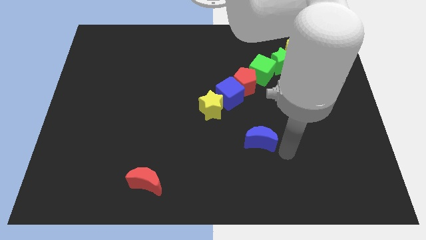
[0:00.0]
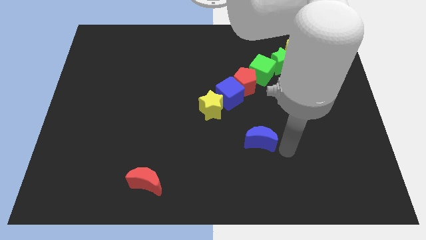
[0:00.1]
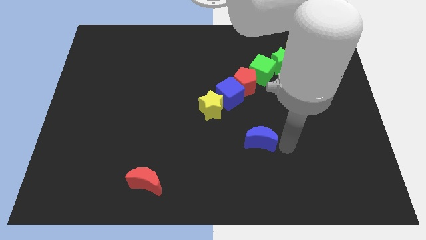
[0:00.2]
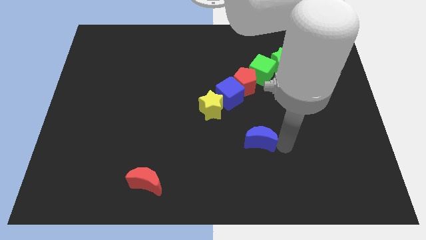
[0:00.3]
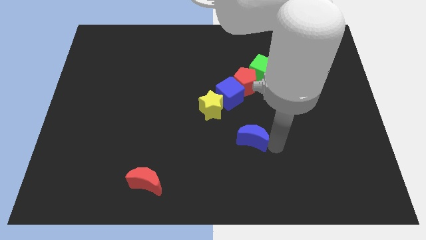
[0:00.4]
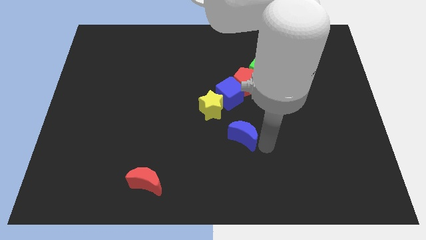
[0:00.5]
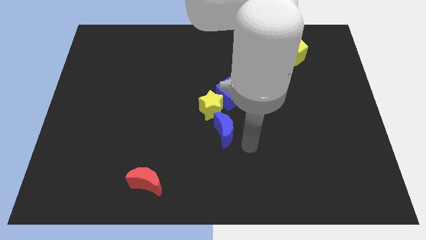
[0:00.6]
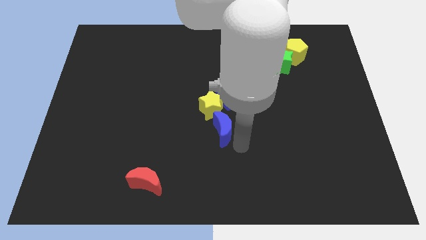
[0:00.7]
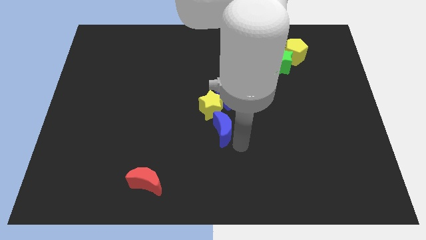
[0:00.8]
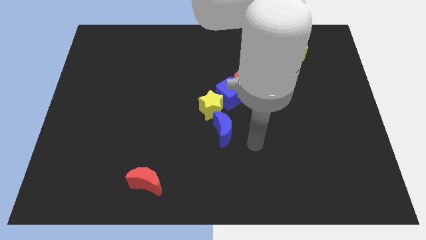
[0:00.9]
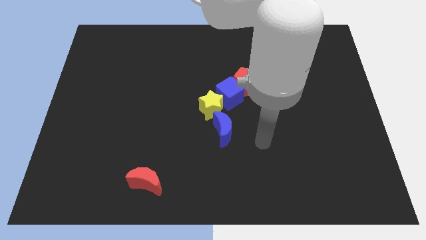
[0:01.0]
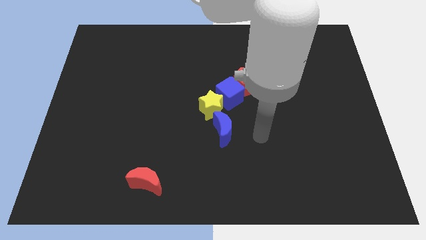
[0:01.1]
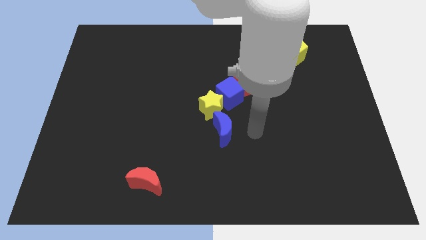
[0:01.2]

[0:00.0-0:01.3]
place the blue moon below the yellow star

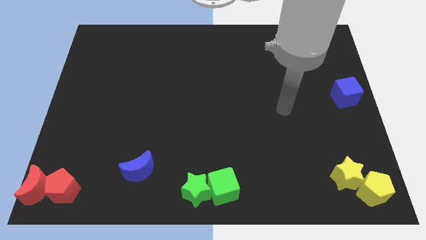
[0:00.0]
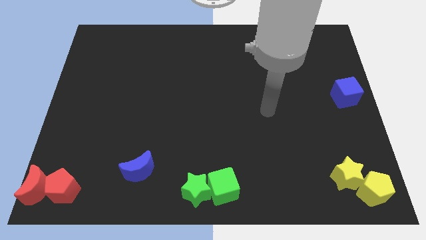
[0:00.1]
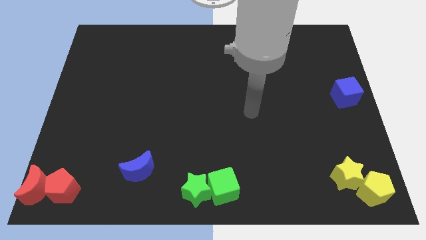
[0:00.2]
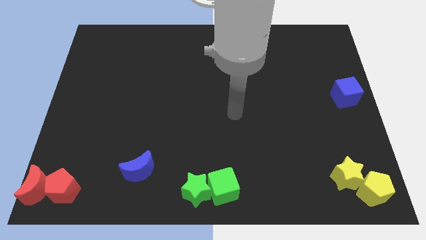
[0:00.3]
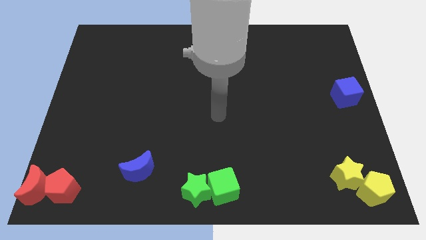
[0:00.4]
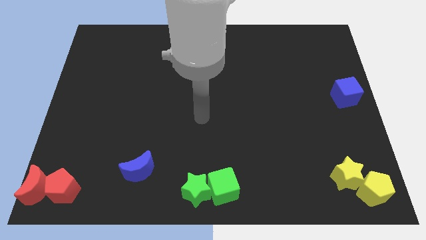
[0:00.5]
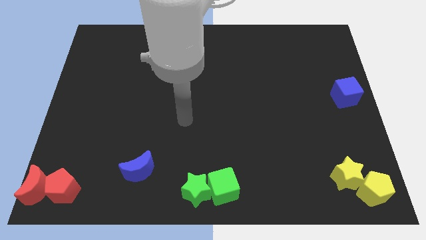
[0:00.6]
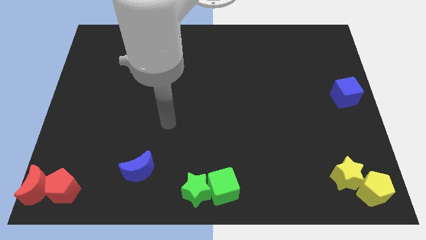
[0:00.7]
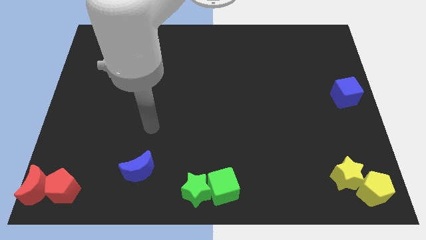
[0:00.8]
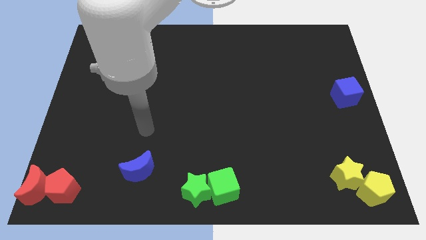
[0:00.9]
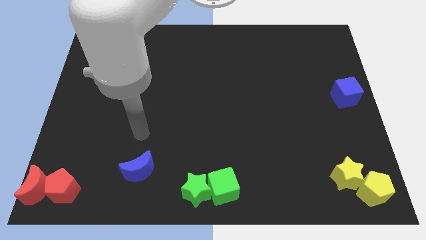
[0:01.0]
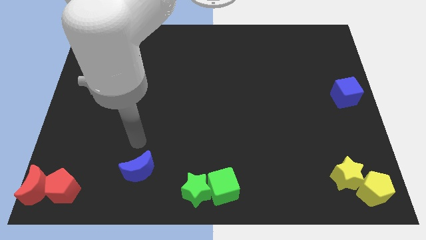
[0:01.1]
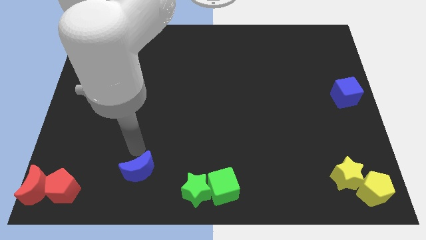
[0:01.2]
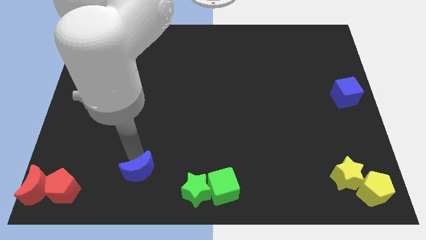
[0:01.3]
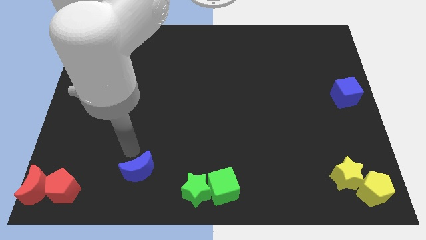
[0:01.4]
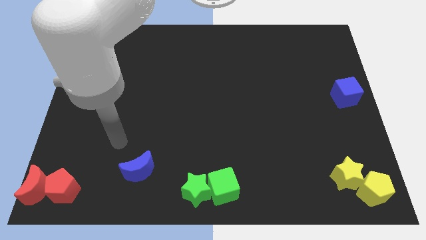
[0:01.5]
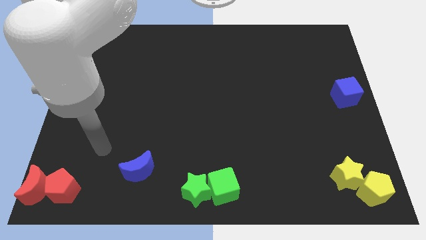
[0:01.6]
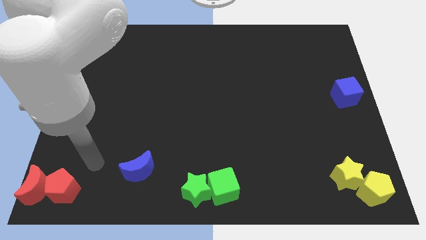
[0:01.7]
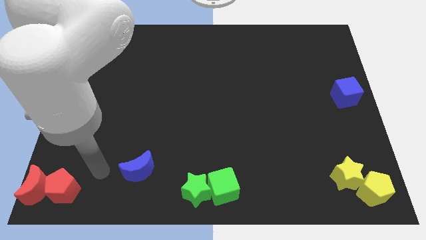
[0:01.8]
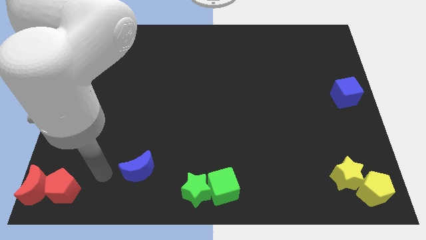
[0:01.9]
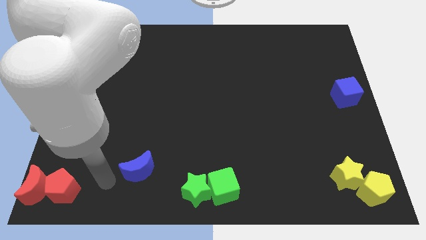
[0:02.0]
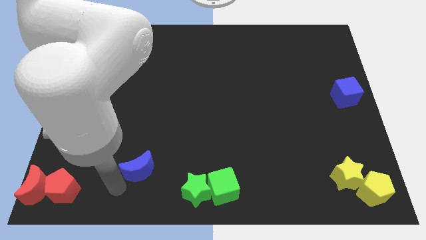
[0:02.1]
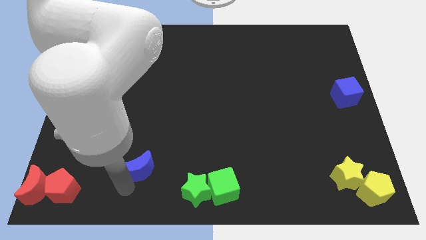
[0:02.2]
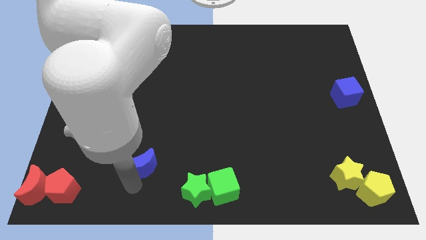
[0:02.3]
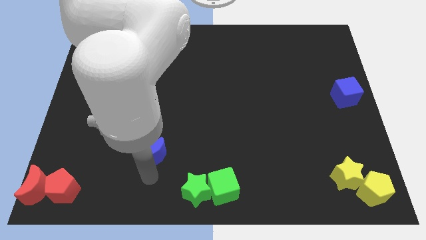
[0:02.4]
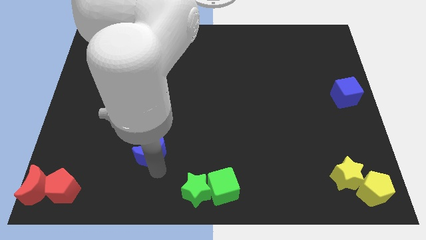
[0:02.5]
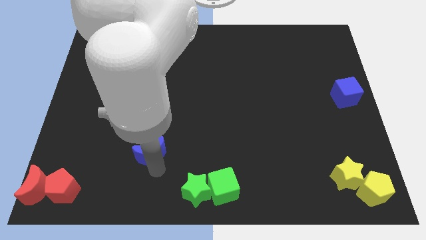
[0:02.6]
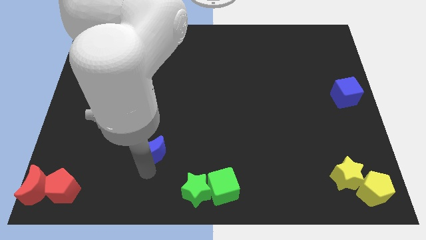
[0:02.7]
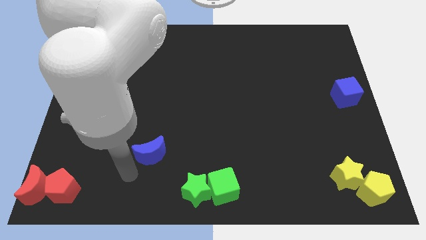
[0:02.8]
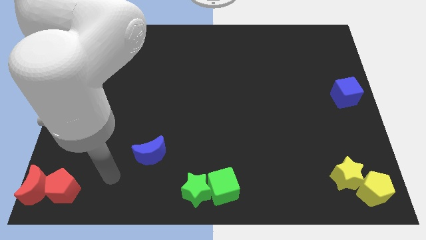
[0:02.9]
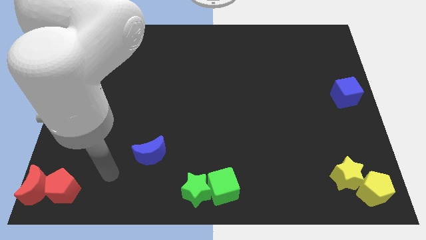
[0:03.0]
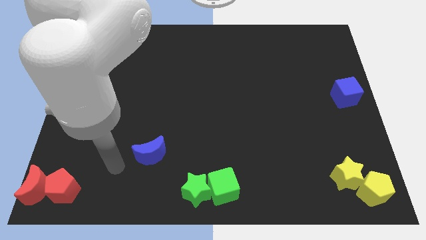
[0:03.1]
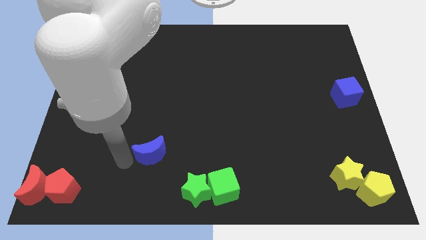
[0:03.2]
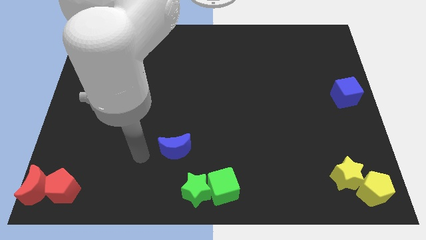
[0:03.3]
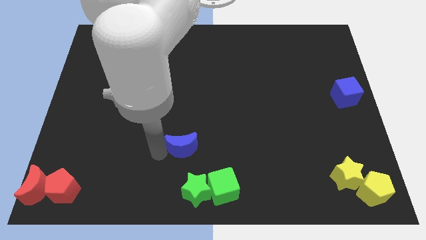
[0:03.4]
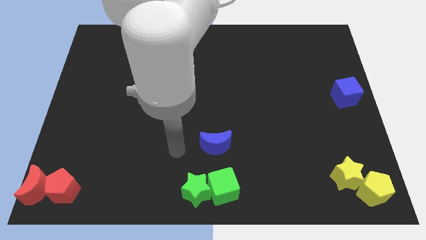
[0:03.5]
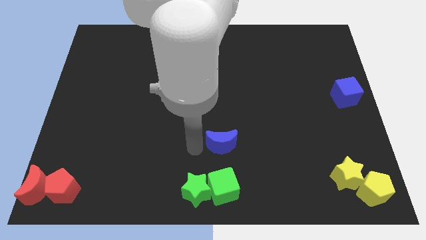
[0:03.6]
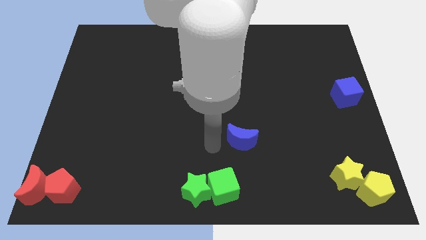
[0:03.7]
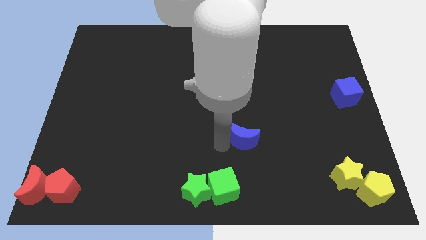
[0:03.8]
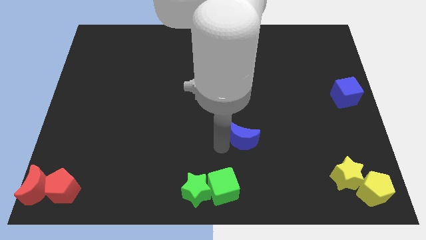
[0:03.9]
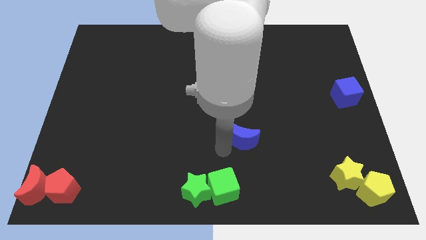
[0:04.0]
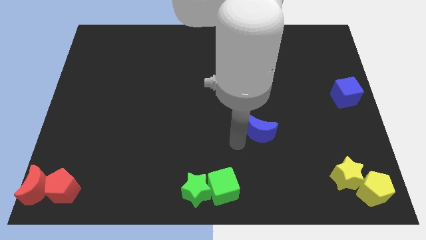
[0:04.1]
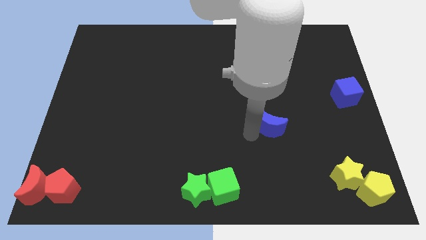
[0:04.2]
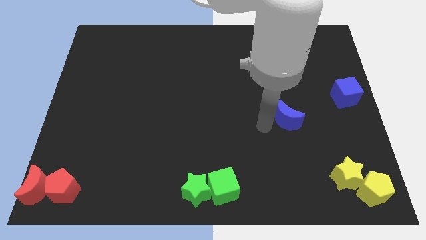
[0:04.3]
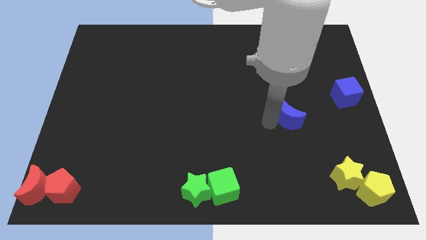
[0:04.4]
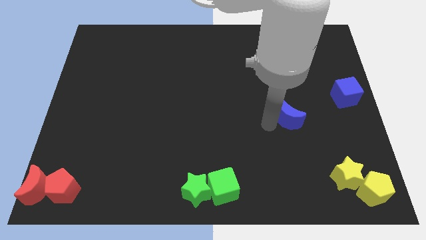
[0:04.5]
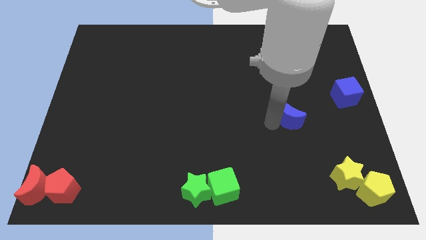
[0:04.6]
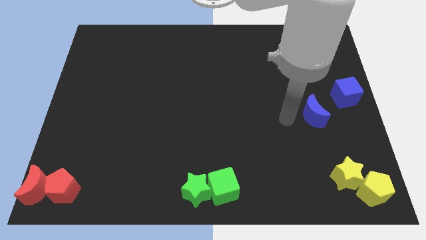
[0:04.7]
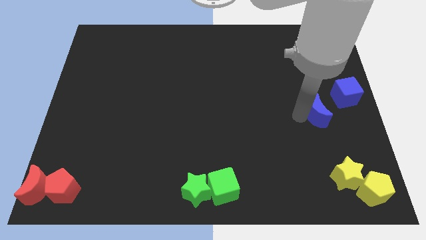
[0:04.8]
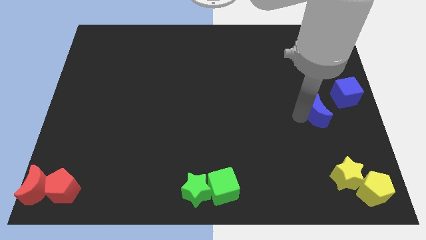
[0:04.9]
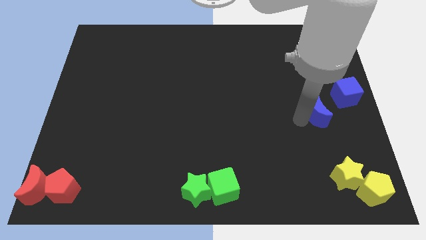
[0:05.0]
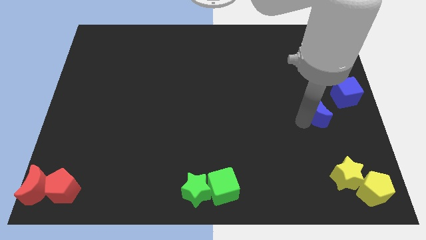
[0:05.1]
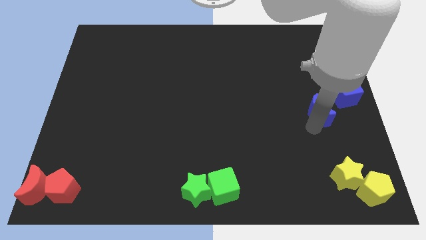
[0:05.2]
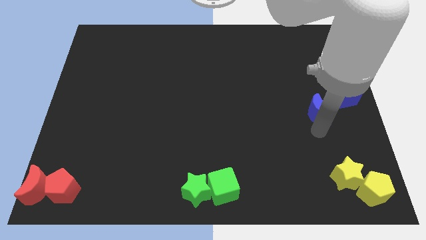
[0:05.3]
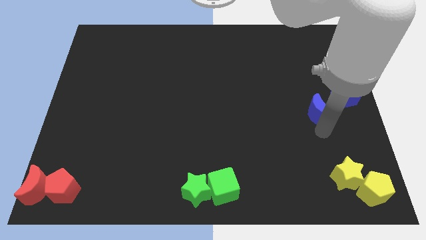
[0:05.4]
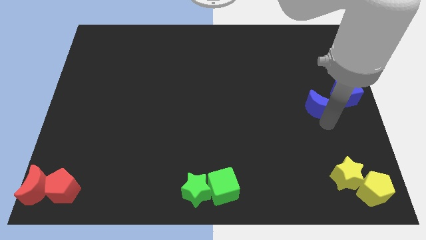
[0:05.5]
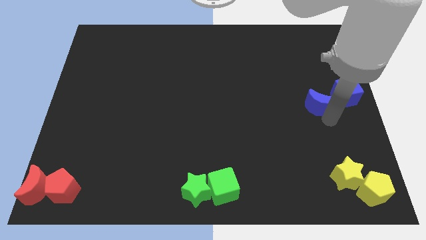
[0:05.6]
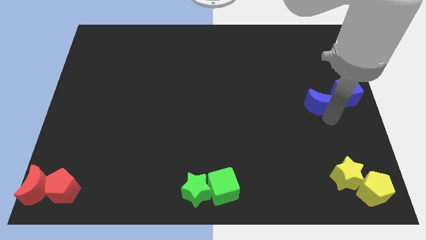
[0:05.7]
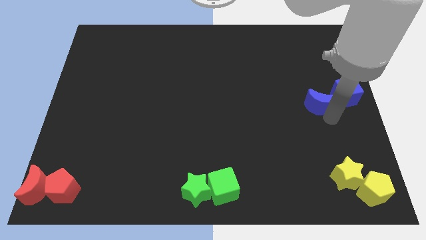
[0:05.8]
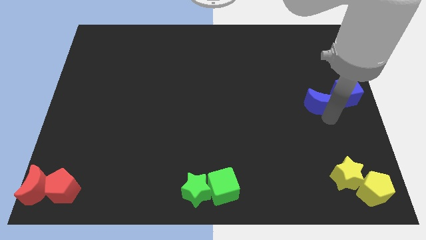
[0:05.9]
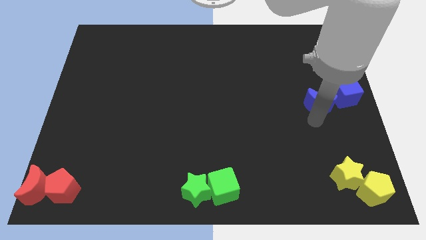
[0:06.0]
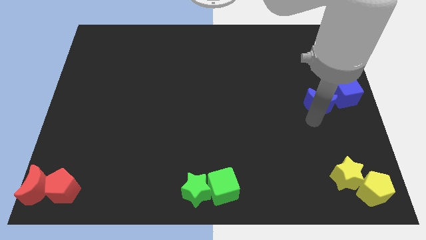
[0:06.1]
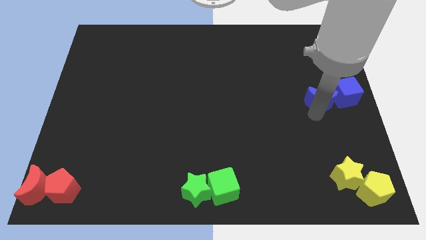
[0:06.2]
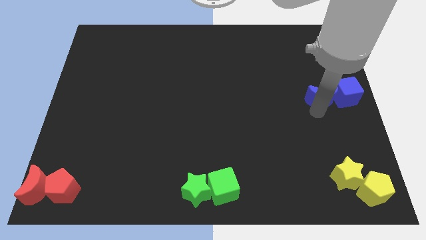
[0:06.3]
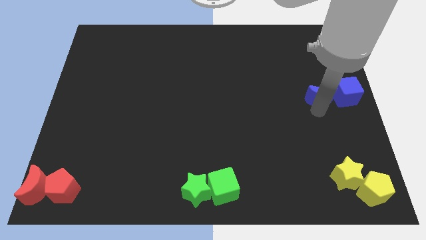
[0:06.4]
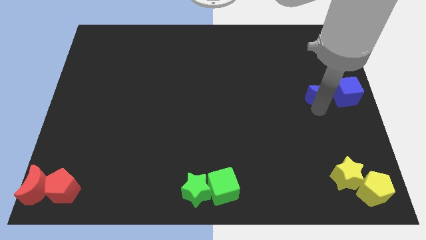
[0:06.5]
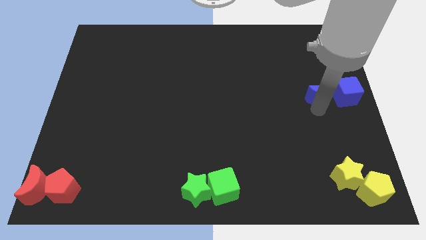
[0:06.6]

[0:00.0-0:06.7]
push the blue moon to the left of the blue cube

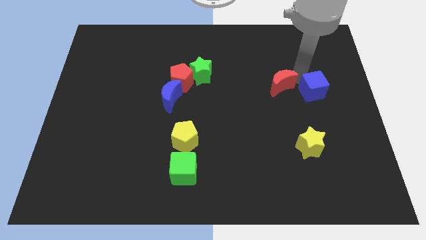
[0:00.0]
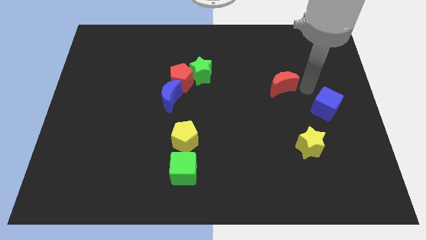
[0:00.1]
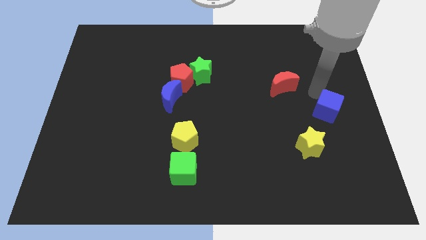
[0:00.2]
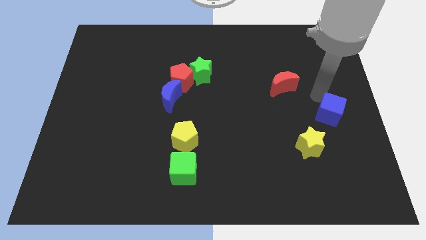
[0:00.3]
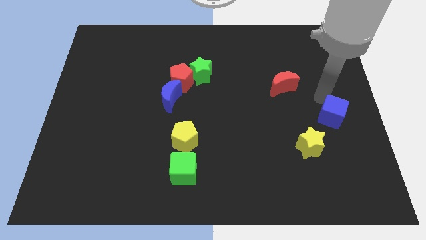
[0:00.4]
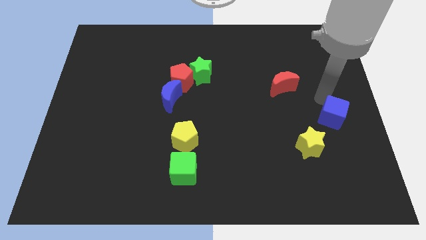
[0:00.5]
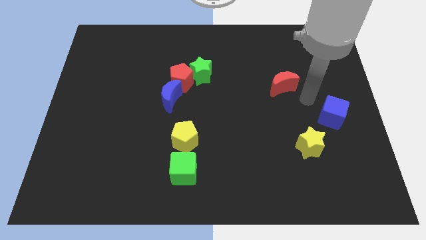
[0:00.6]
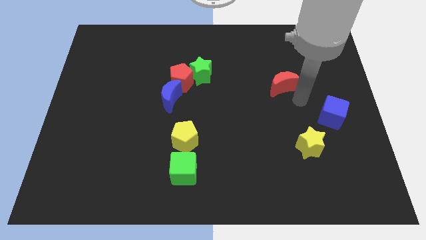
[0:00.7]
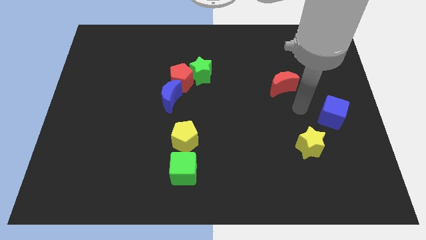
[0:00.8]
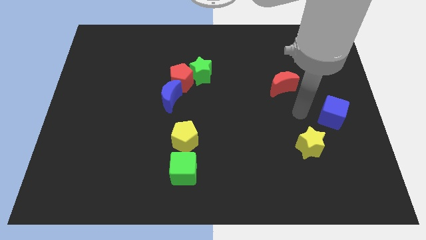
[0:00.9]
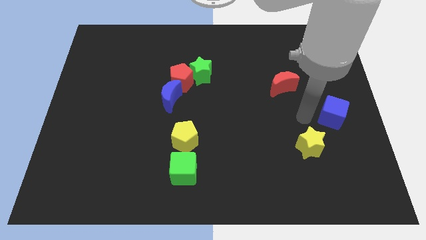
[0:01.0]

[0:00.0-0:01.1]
move the blue block away from the red crescent
